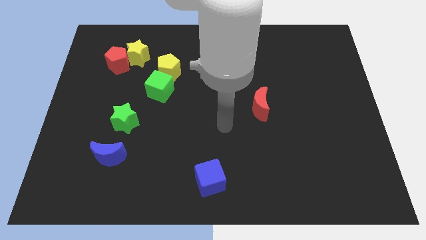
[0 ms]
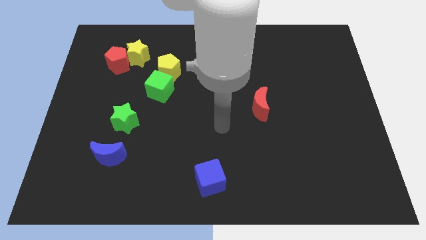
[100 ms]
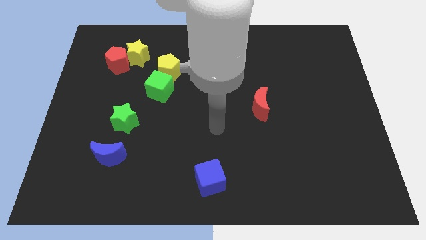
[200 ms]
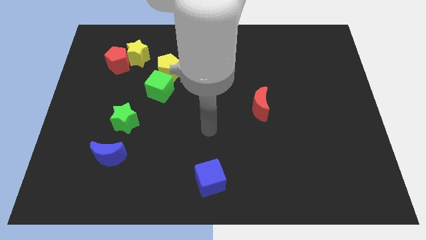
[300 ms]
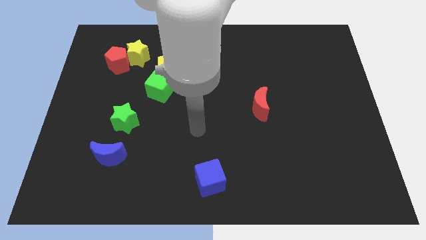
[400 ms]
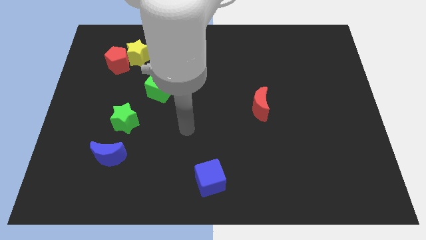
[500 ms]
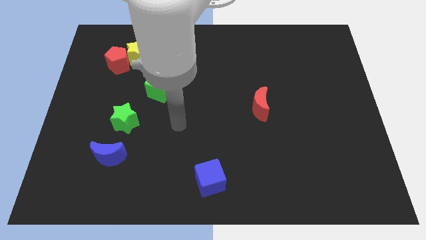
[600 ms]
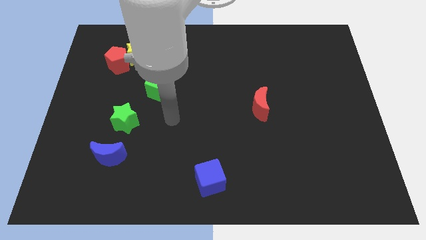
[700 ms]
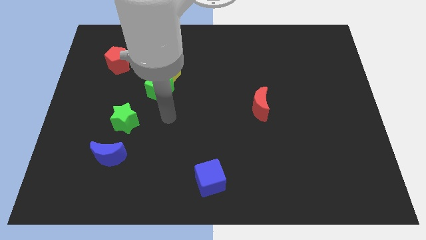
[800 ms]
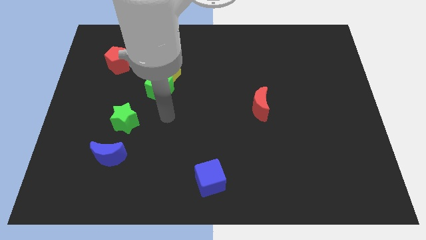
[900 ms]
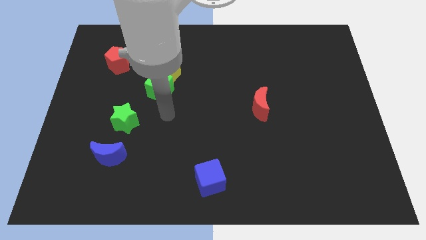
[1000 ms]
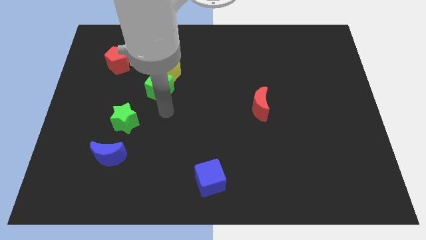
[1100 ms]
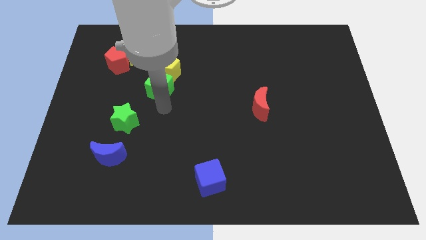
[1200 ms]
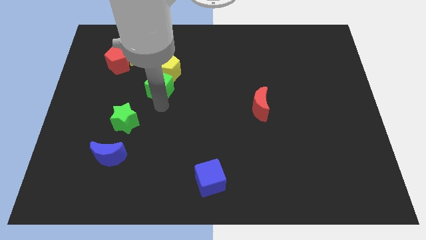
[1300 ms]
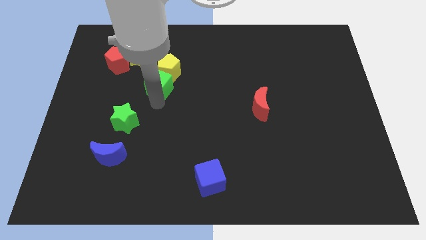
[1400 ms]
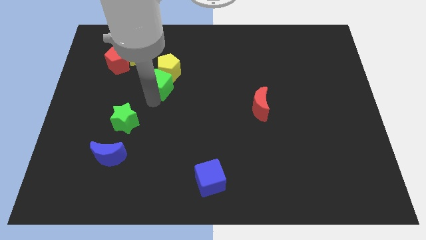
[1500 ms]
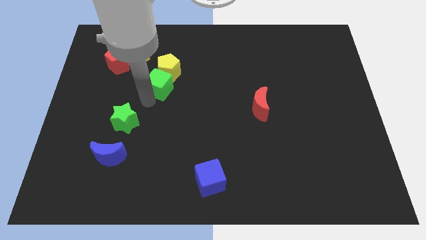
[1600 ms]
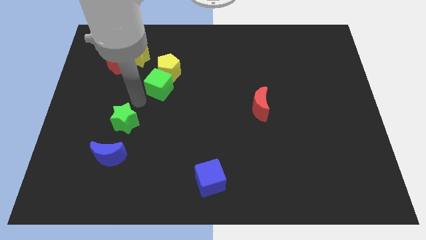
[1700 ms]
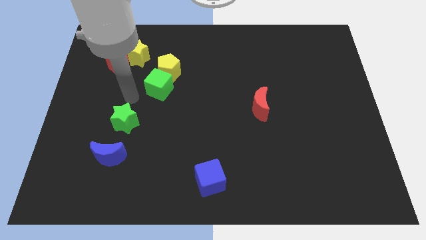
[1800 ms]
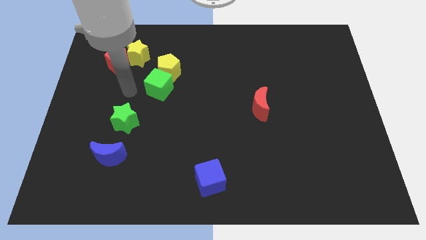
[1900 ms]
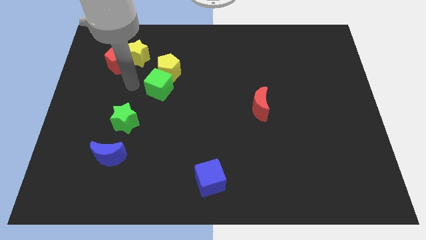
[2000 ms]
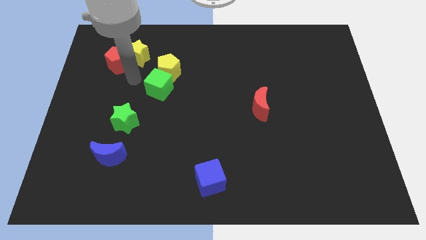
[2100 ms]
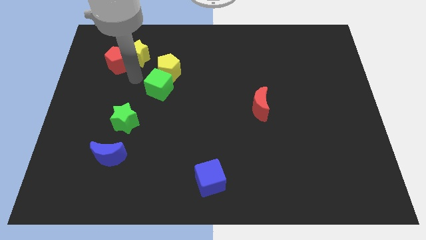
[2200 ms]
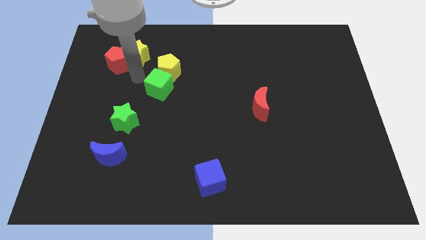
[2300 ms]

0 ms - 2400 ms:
slightly touch the green cube

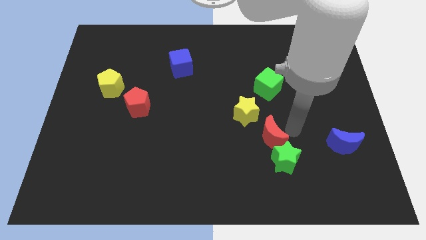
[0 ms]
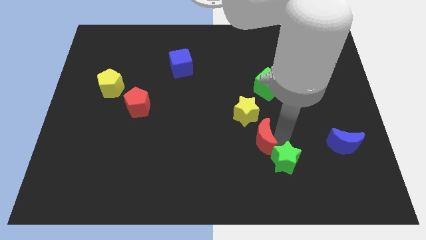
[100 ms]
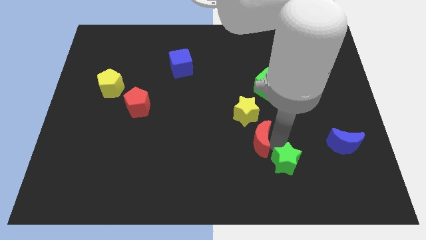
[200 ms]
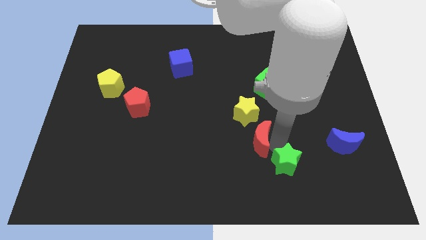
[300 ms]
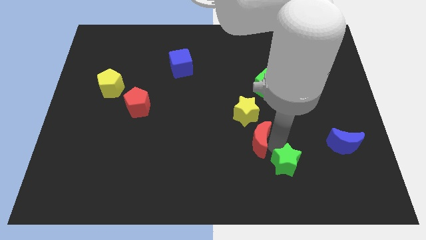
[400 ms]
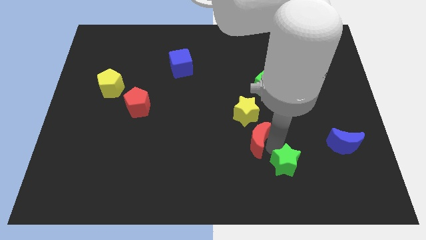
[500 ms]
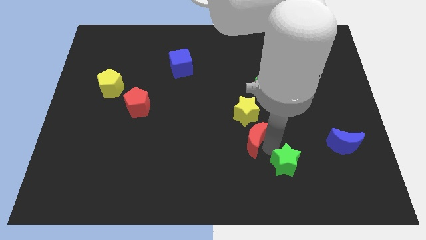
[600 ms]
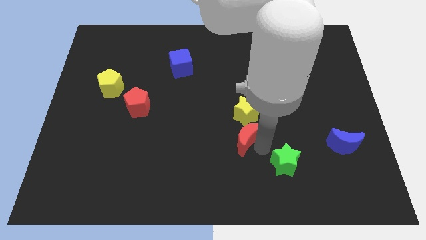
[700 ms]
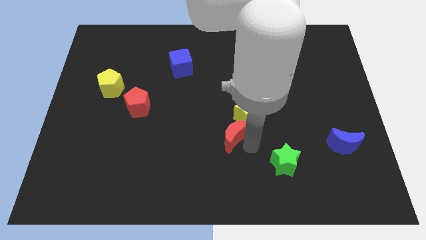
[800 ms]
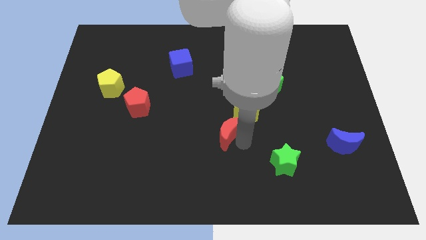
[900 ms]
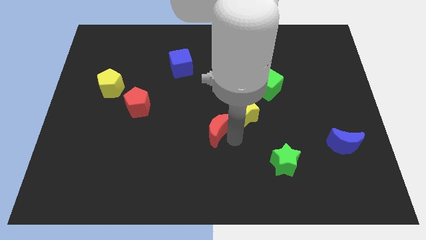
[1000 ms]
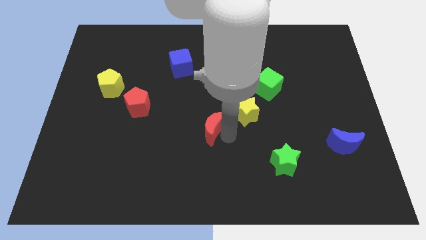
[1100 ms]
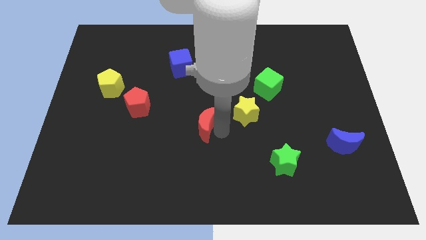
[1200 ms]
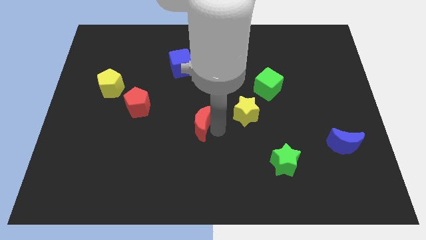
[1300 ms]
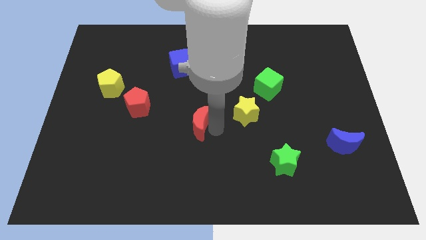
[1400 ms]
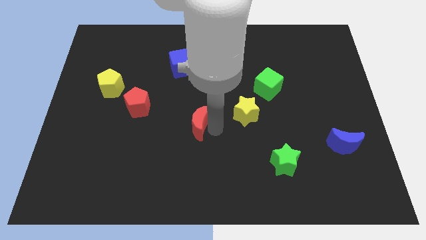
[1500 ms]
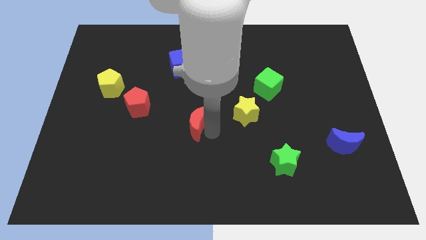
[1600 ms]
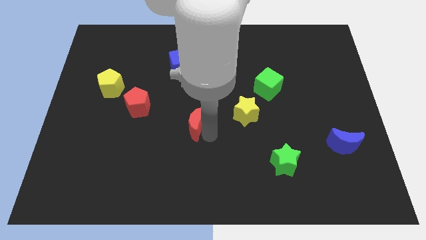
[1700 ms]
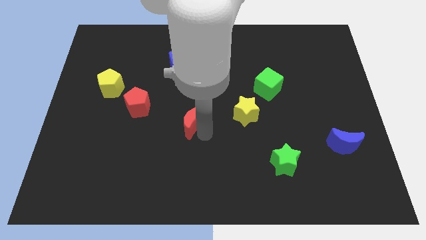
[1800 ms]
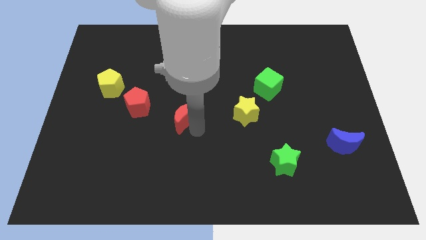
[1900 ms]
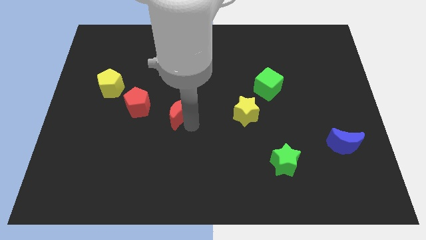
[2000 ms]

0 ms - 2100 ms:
push the red crescent towards the red pentagon

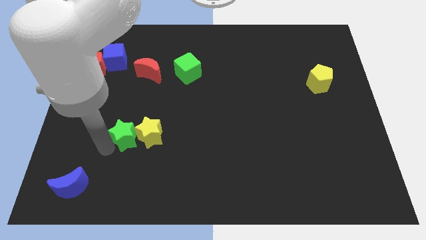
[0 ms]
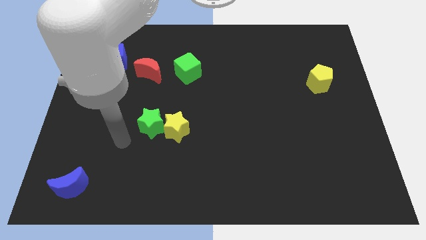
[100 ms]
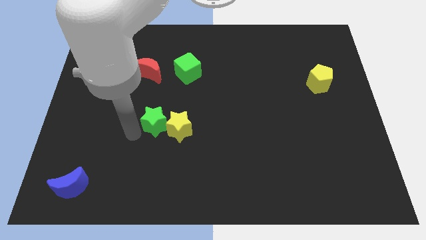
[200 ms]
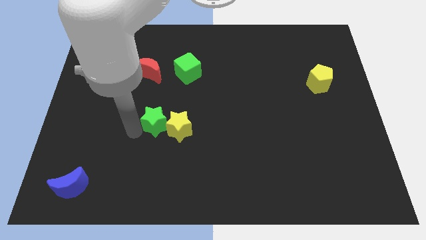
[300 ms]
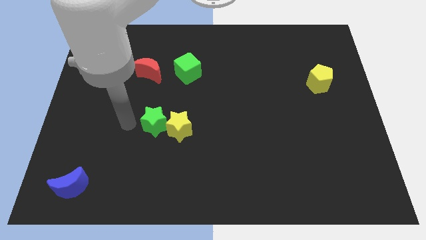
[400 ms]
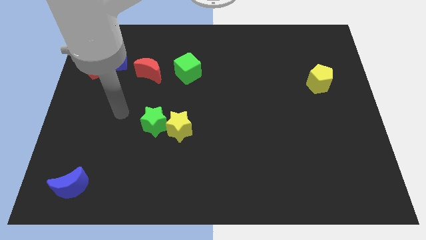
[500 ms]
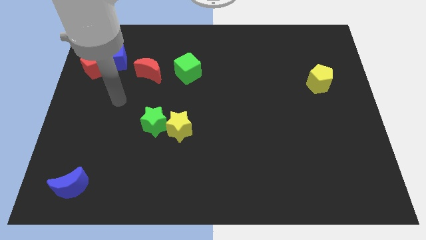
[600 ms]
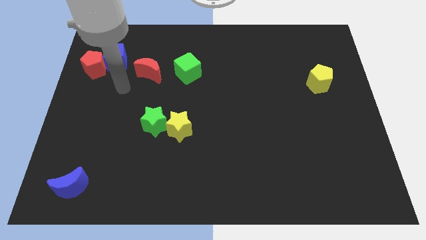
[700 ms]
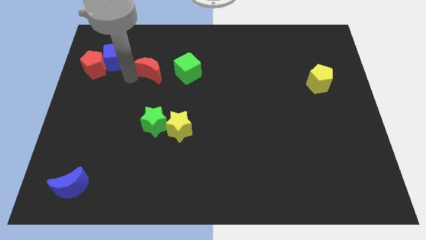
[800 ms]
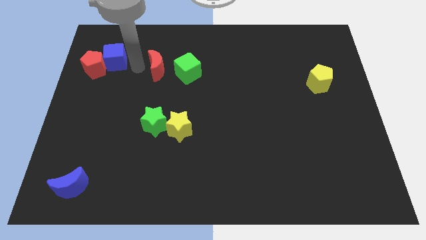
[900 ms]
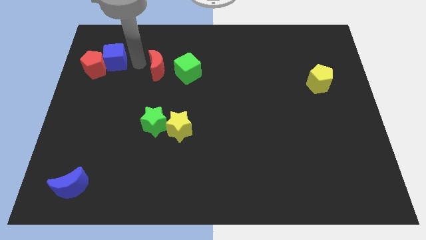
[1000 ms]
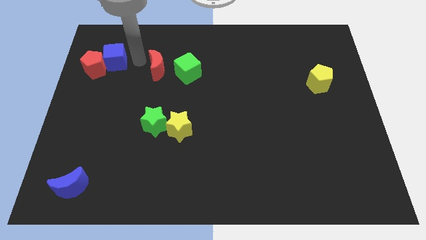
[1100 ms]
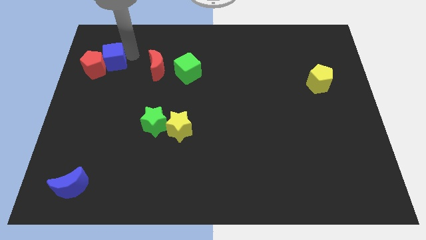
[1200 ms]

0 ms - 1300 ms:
slightly move the red moon upwards

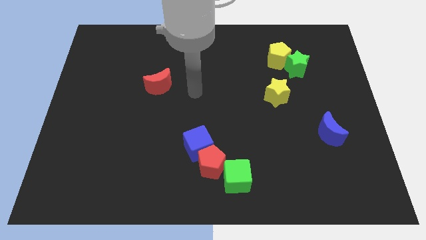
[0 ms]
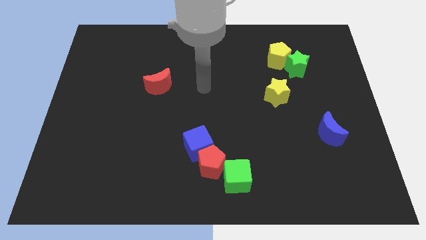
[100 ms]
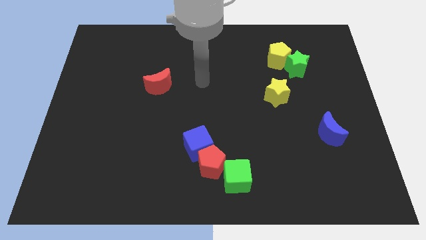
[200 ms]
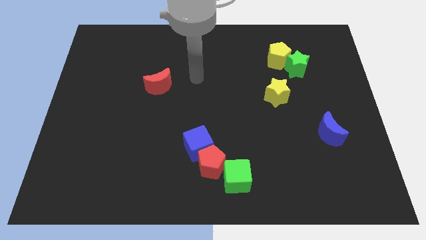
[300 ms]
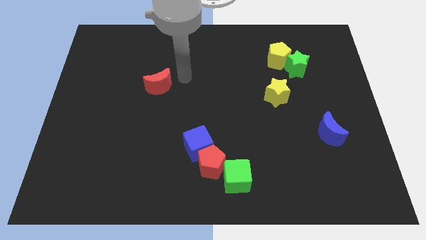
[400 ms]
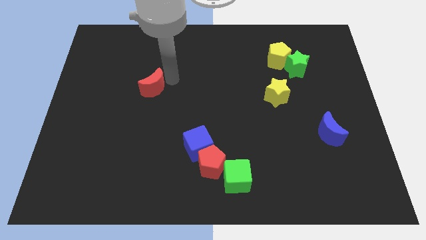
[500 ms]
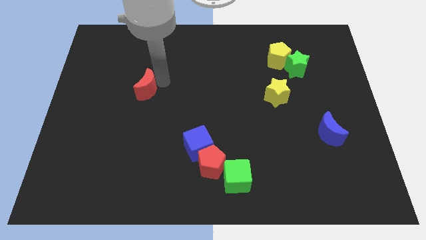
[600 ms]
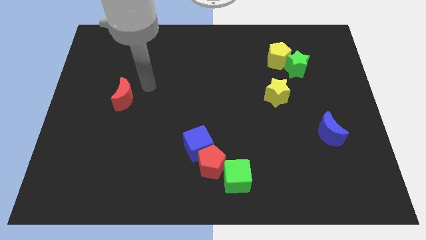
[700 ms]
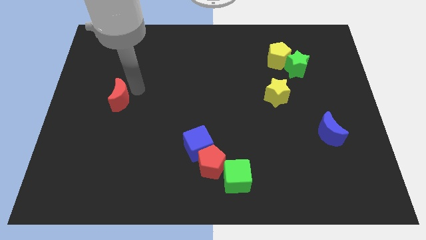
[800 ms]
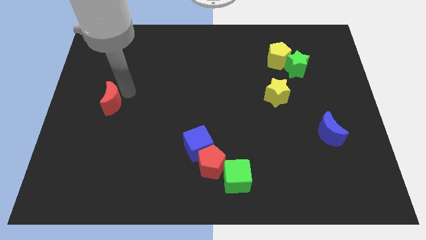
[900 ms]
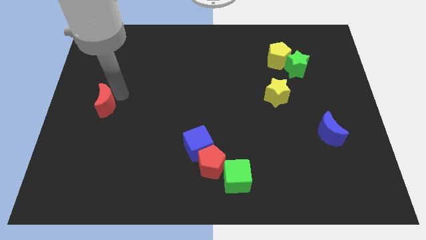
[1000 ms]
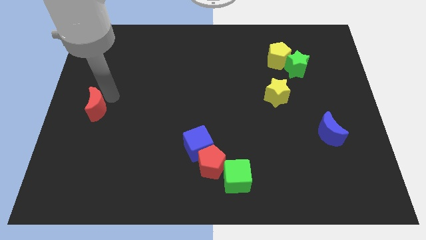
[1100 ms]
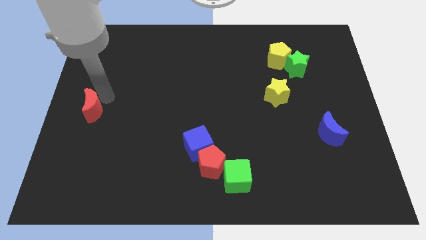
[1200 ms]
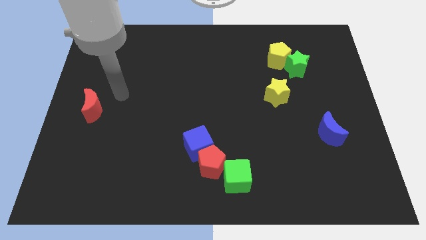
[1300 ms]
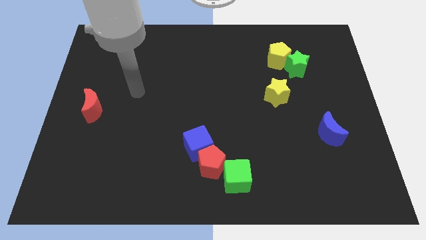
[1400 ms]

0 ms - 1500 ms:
push the red moon towards the center left of the board

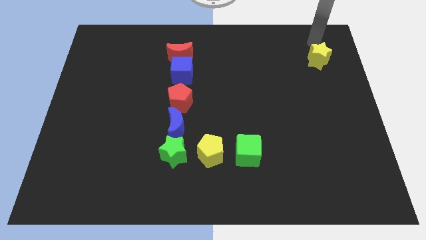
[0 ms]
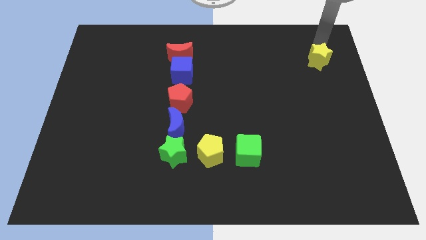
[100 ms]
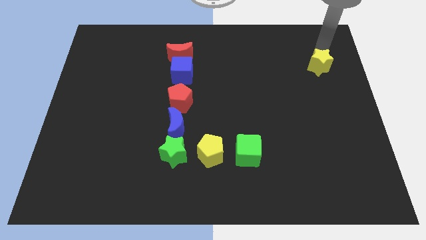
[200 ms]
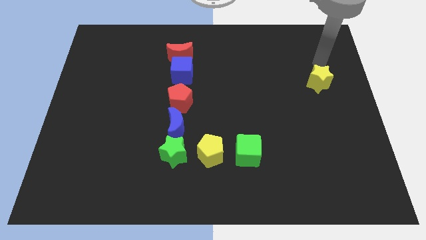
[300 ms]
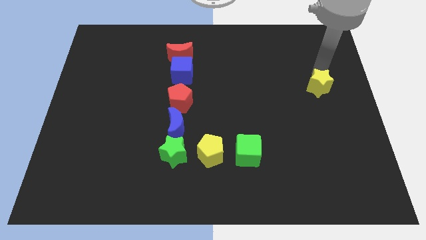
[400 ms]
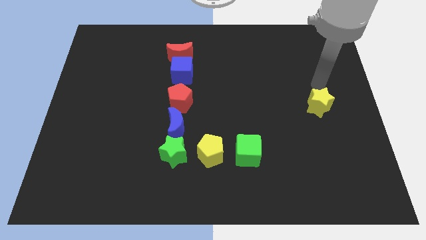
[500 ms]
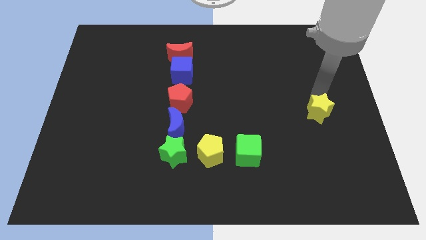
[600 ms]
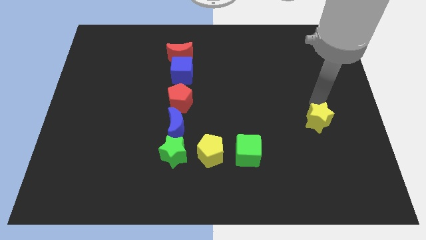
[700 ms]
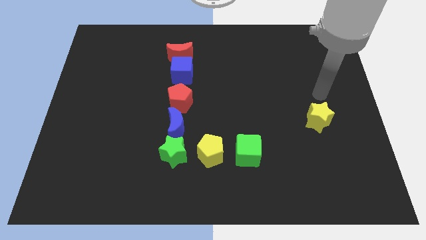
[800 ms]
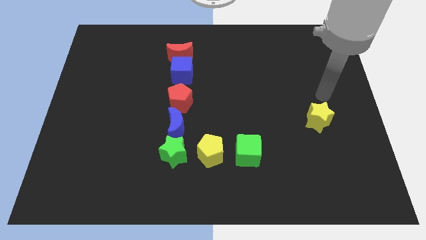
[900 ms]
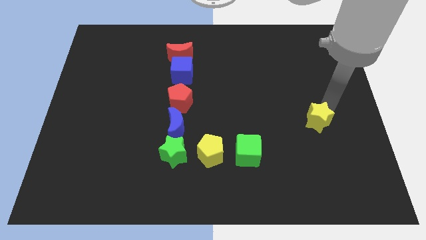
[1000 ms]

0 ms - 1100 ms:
move the yellow star horizontal to the blue moon

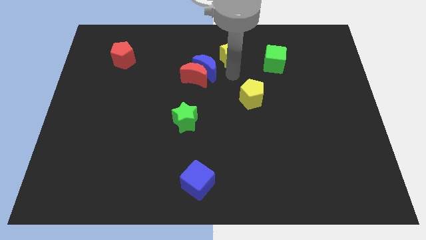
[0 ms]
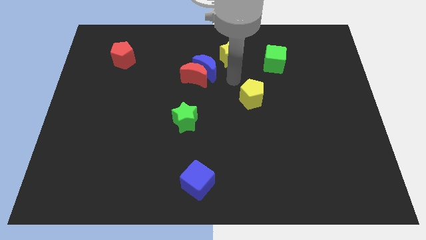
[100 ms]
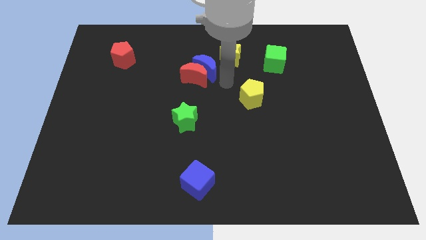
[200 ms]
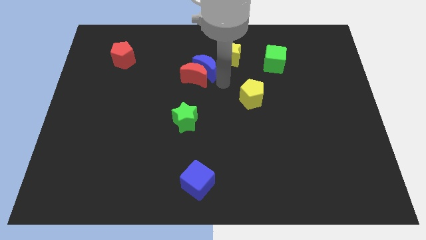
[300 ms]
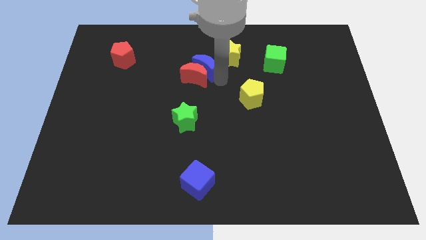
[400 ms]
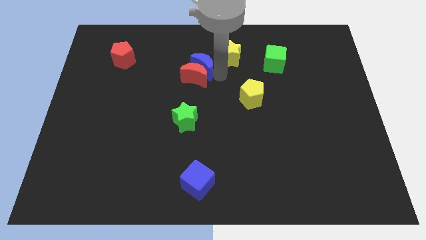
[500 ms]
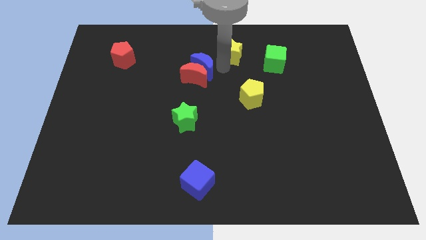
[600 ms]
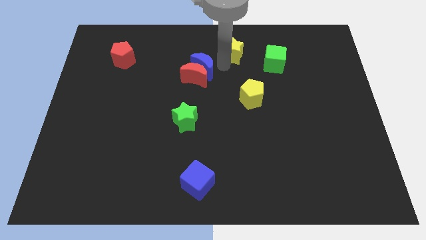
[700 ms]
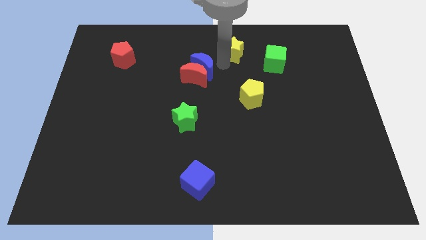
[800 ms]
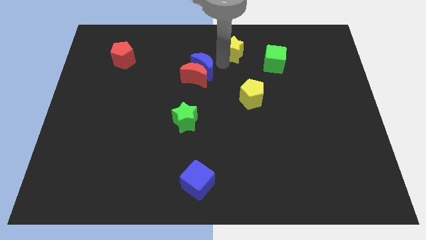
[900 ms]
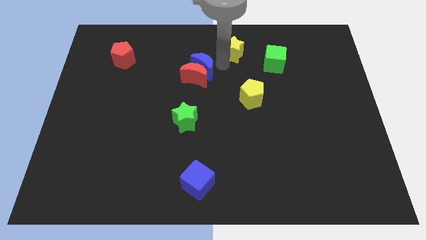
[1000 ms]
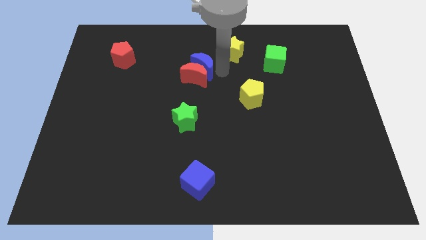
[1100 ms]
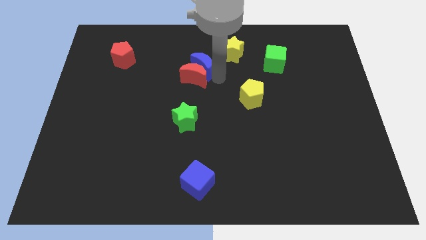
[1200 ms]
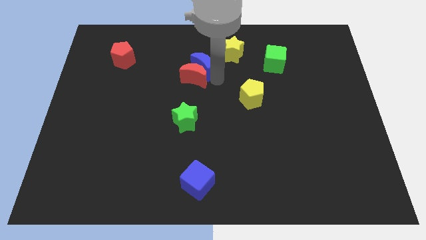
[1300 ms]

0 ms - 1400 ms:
push the yellow star slightly to the top side of the board
